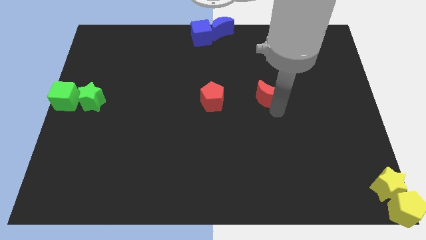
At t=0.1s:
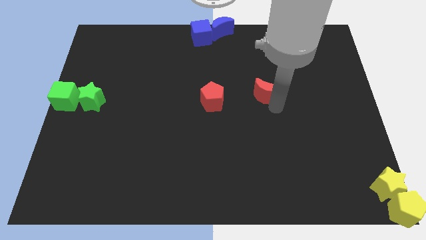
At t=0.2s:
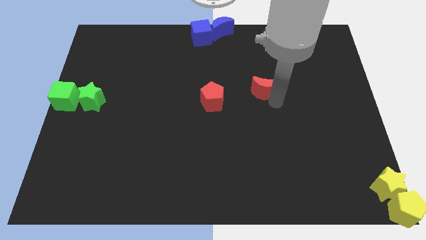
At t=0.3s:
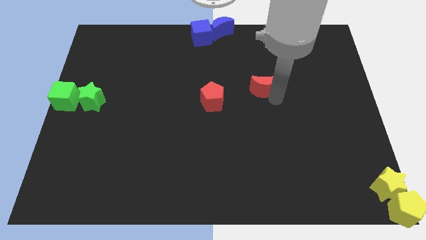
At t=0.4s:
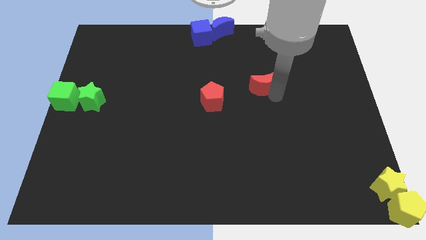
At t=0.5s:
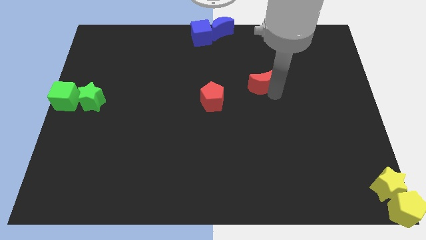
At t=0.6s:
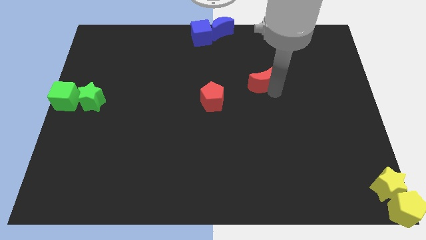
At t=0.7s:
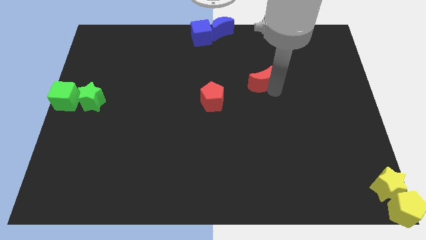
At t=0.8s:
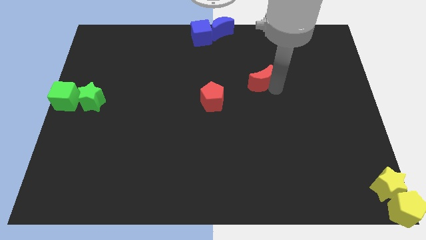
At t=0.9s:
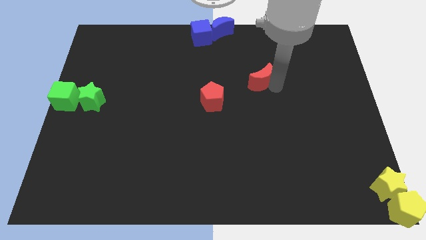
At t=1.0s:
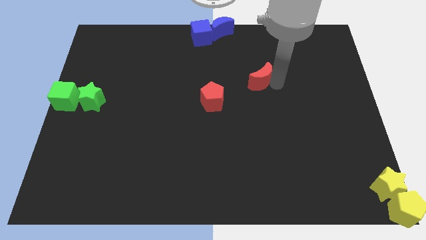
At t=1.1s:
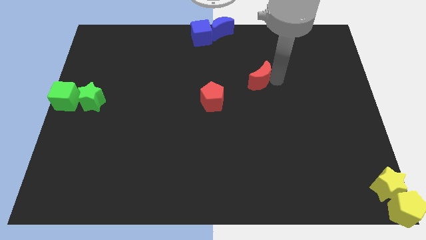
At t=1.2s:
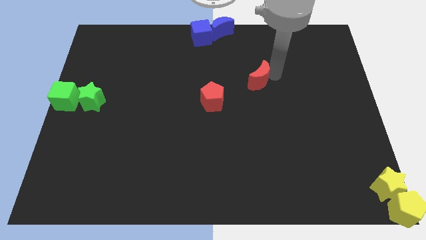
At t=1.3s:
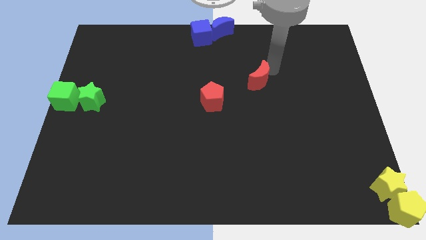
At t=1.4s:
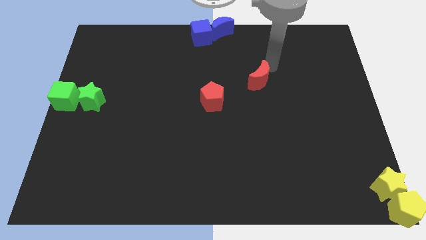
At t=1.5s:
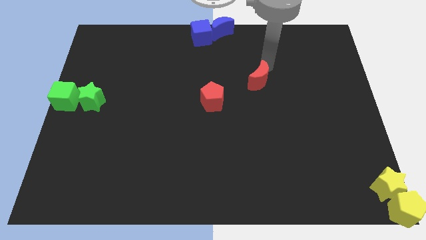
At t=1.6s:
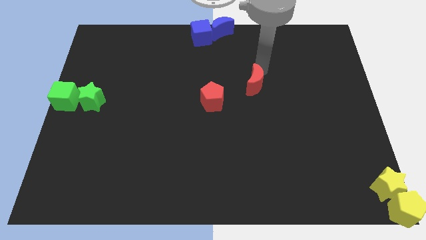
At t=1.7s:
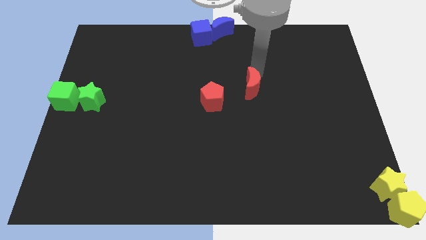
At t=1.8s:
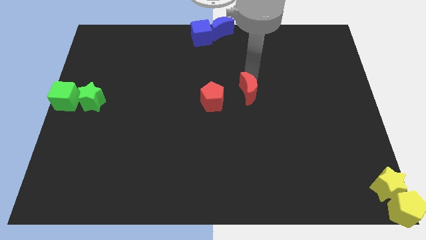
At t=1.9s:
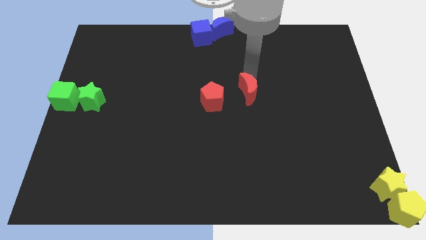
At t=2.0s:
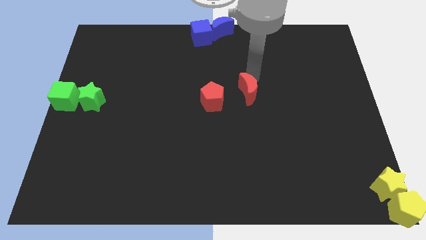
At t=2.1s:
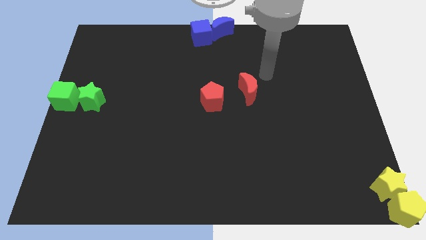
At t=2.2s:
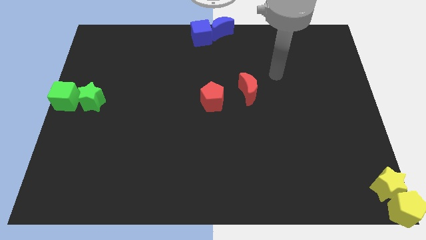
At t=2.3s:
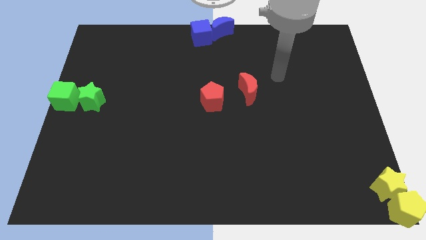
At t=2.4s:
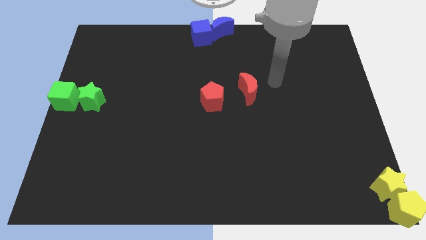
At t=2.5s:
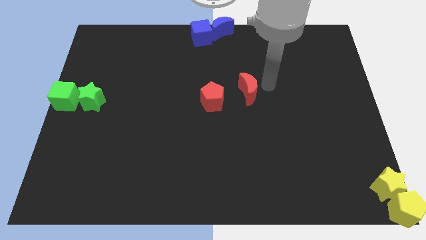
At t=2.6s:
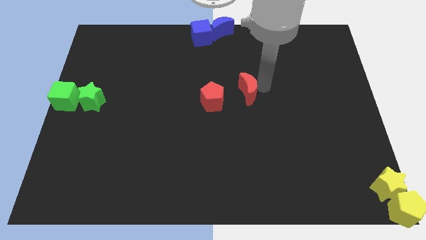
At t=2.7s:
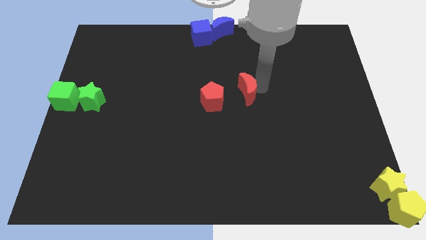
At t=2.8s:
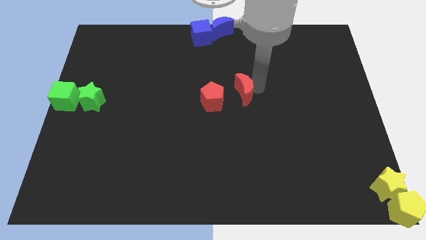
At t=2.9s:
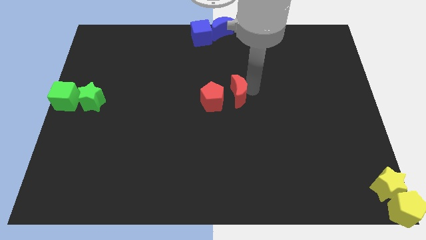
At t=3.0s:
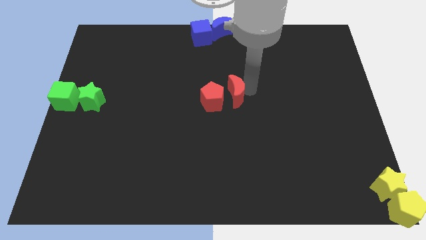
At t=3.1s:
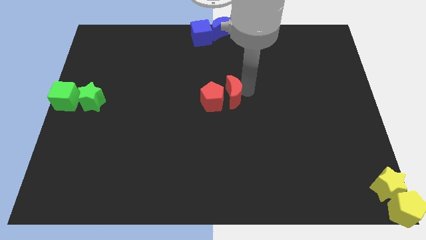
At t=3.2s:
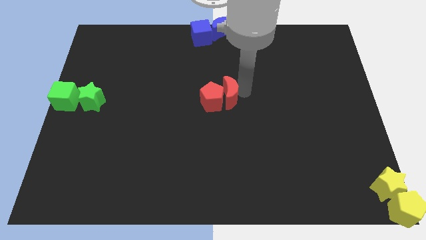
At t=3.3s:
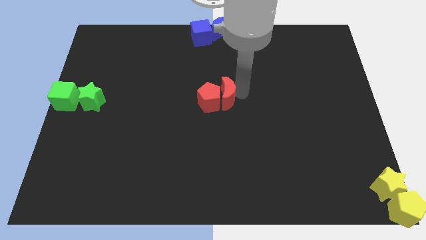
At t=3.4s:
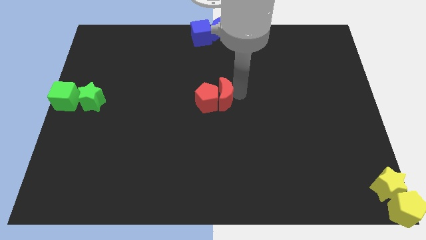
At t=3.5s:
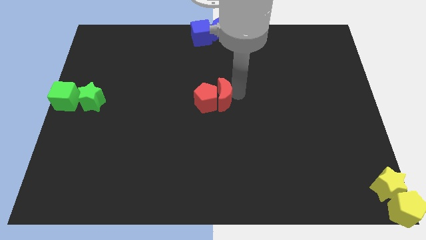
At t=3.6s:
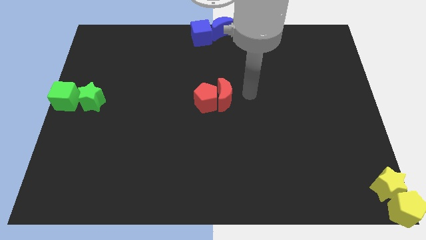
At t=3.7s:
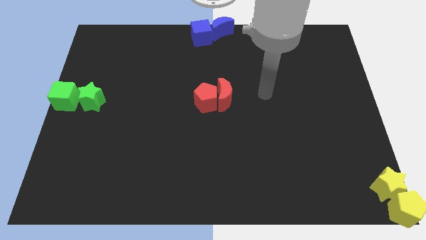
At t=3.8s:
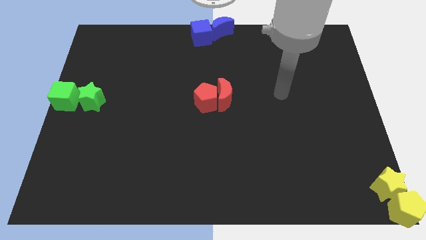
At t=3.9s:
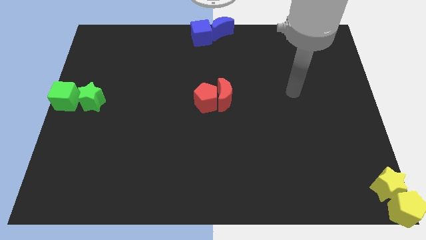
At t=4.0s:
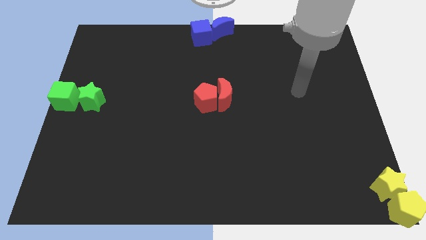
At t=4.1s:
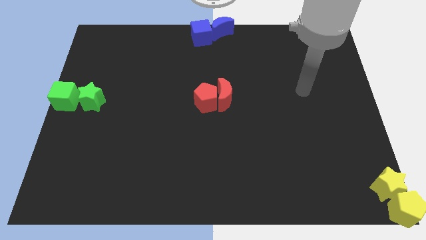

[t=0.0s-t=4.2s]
push red moon close to red pentagon

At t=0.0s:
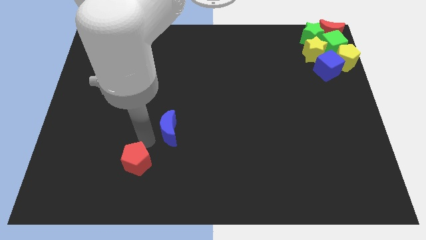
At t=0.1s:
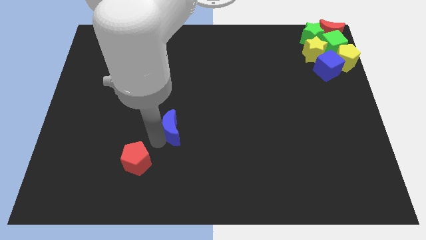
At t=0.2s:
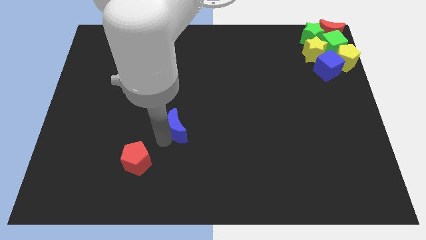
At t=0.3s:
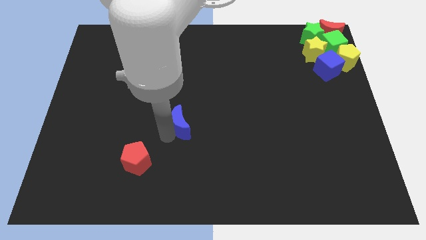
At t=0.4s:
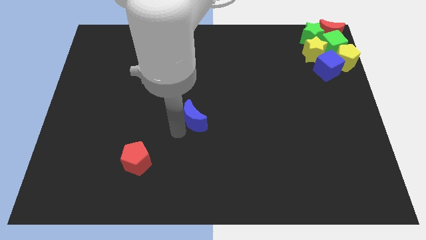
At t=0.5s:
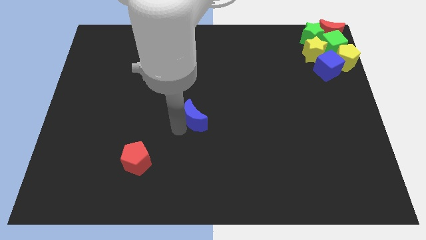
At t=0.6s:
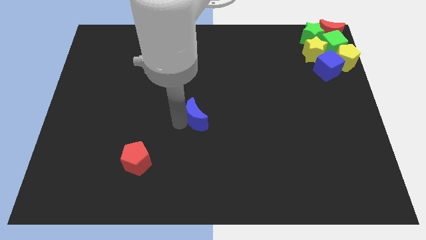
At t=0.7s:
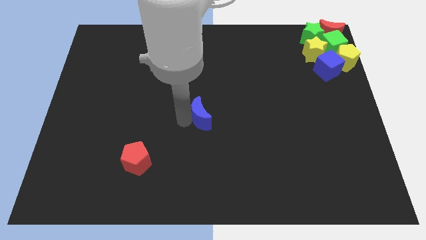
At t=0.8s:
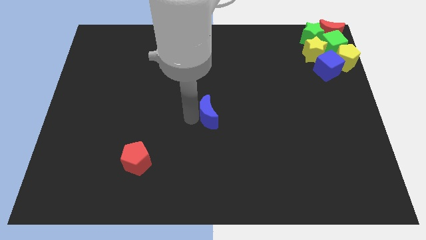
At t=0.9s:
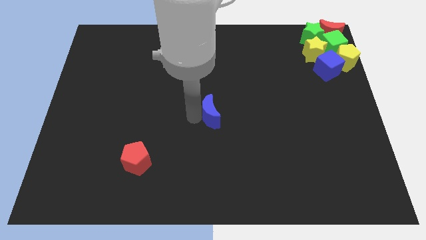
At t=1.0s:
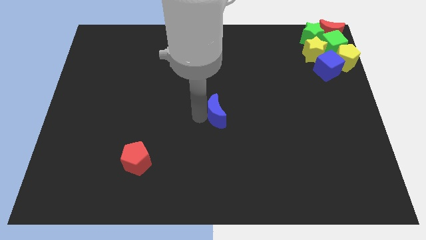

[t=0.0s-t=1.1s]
move the blue cube to the center of the board

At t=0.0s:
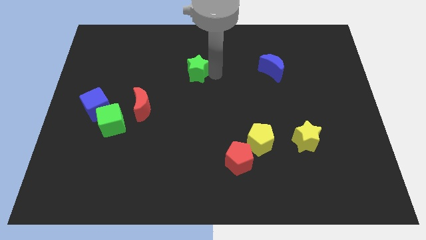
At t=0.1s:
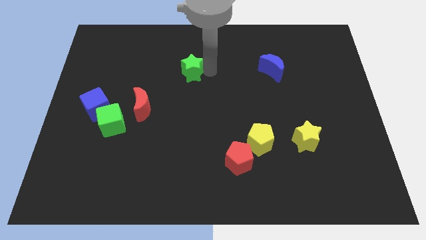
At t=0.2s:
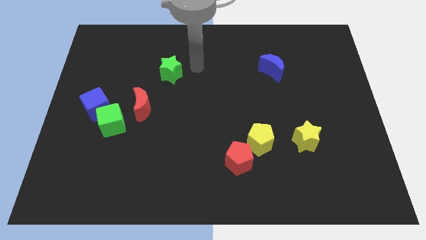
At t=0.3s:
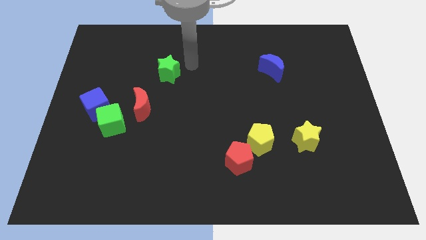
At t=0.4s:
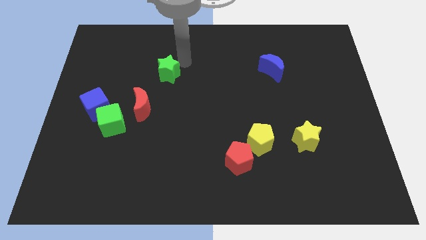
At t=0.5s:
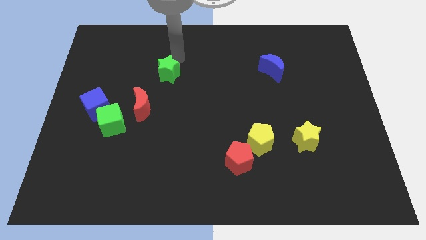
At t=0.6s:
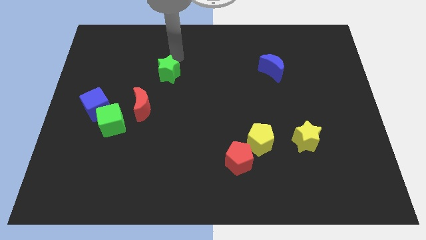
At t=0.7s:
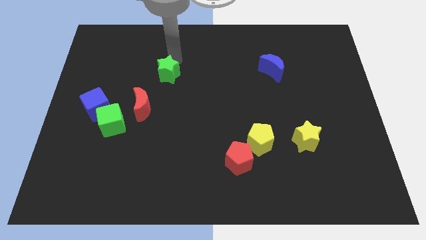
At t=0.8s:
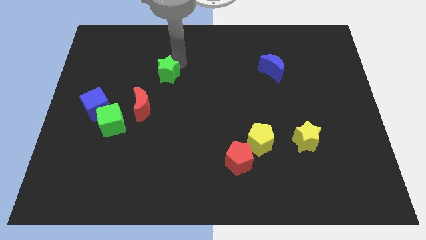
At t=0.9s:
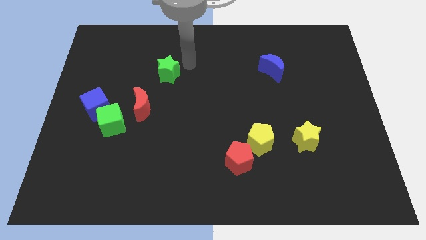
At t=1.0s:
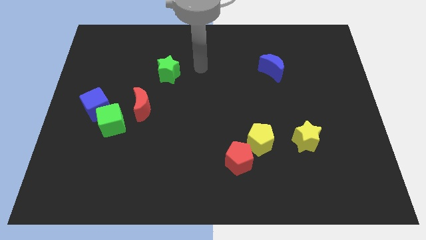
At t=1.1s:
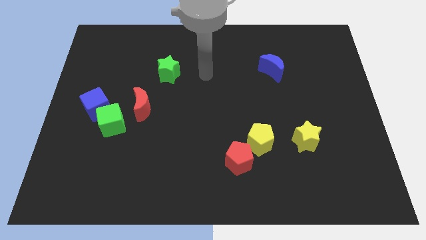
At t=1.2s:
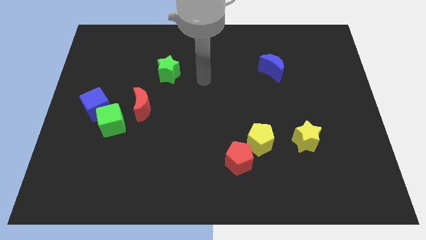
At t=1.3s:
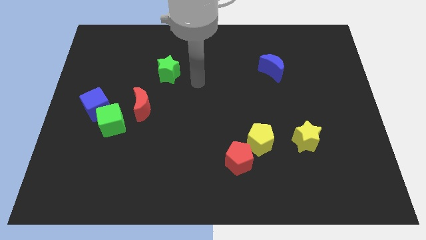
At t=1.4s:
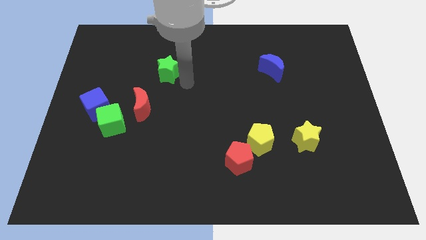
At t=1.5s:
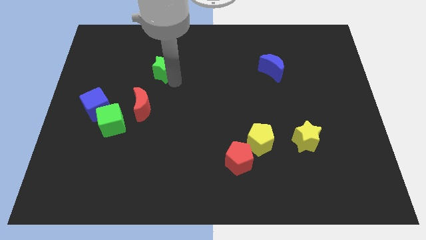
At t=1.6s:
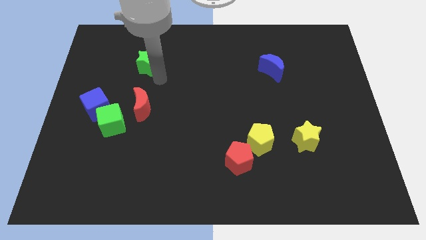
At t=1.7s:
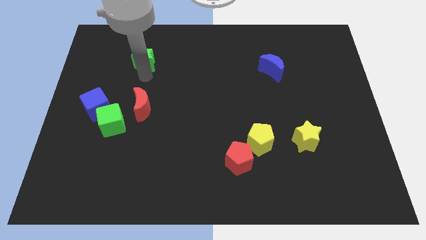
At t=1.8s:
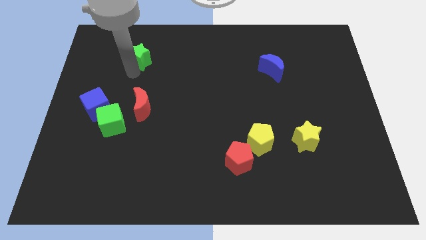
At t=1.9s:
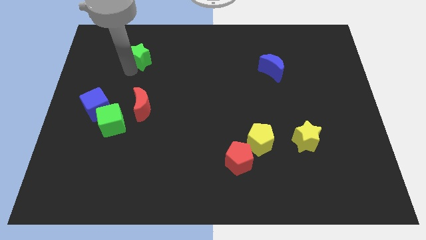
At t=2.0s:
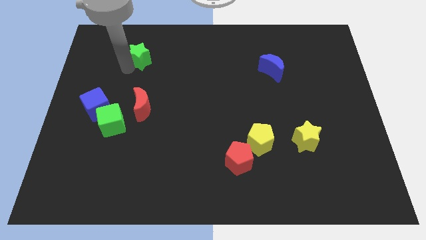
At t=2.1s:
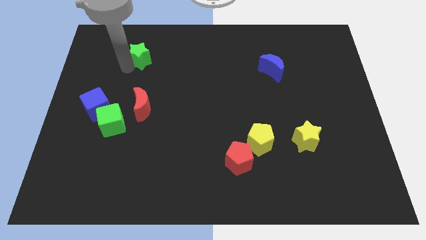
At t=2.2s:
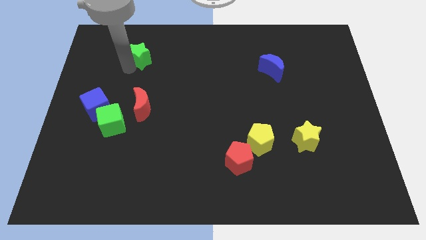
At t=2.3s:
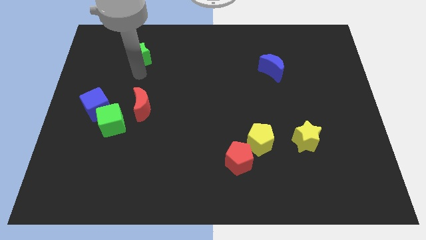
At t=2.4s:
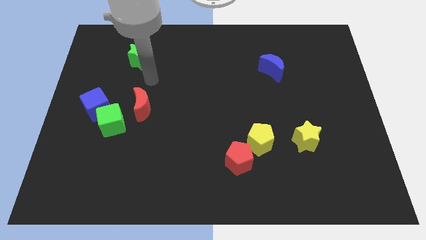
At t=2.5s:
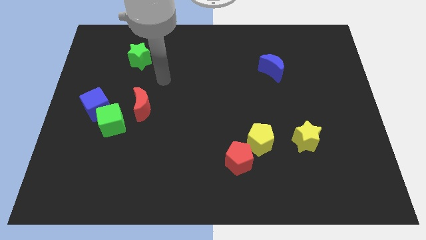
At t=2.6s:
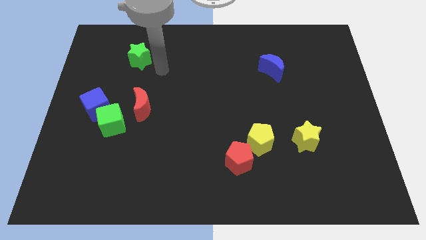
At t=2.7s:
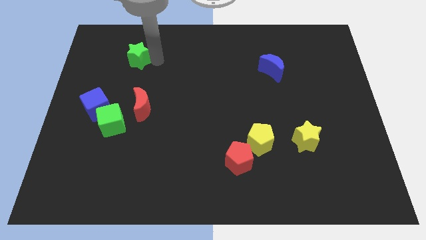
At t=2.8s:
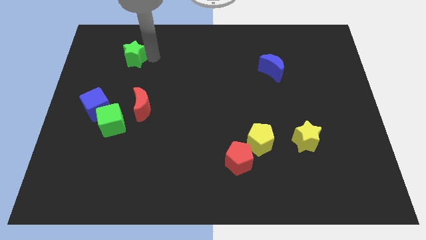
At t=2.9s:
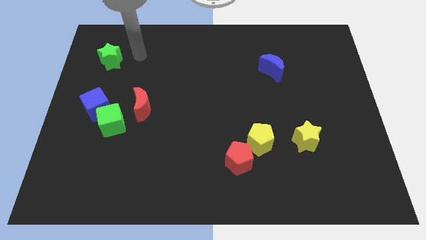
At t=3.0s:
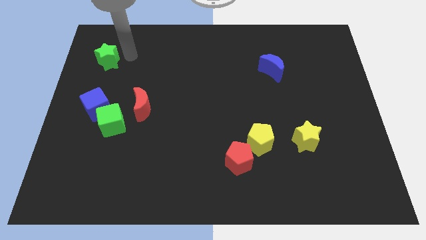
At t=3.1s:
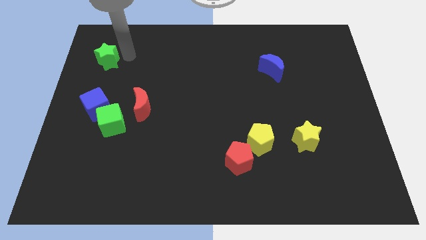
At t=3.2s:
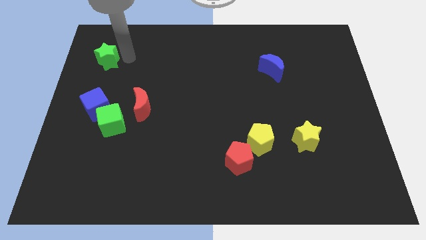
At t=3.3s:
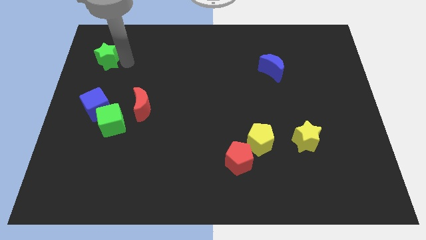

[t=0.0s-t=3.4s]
push the green star towards the left side of the board

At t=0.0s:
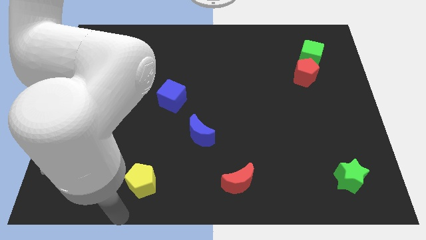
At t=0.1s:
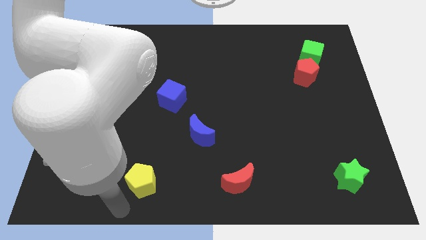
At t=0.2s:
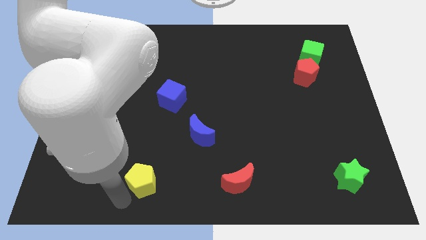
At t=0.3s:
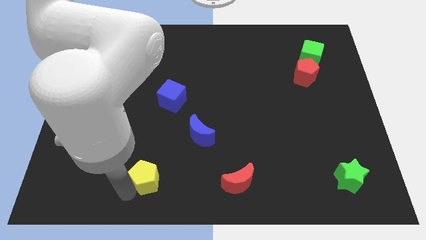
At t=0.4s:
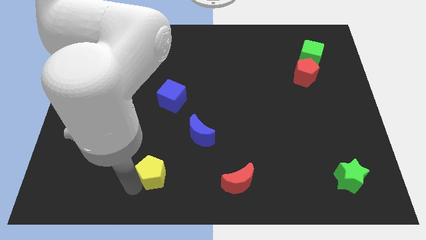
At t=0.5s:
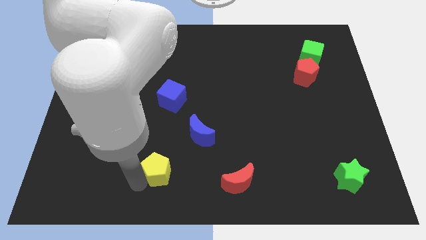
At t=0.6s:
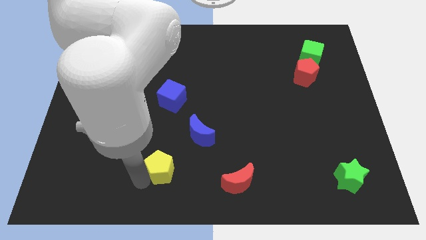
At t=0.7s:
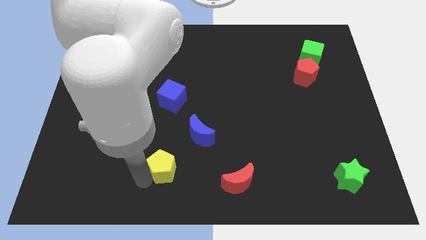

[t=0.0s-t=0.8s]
move the yellow pentagon towards the blue crescent
